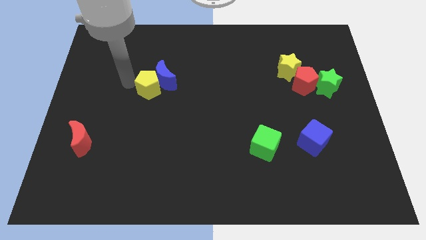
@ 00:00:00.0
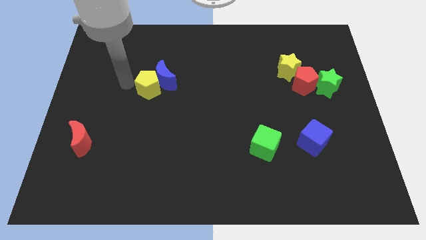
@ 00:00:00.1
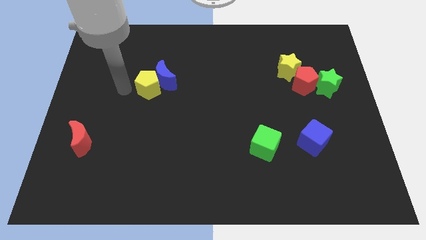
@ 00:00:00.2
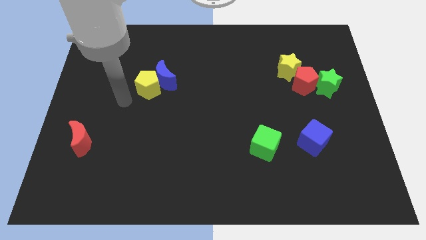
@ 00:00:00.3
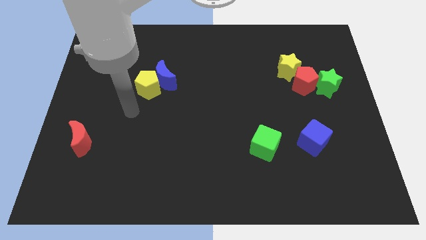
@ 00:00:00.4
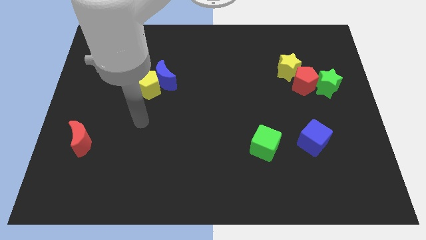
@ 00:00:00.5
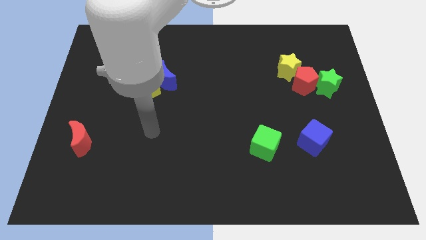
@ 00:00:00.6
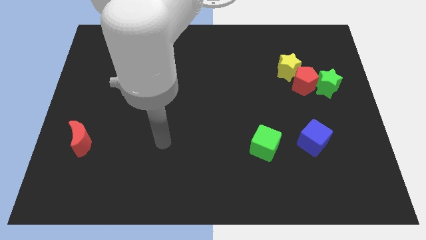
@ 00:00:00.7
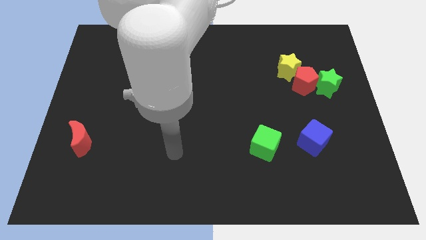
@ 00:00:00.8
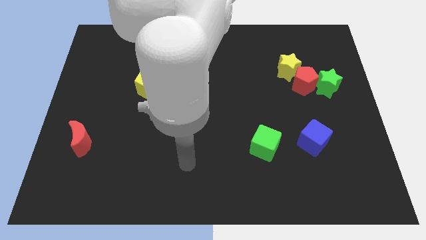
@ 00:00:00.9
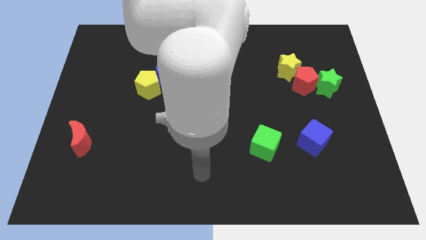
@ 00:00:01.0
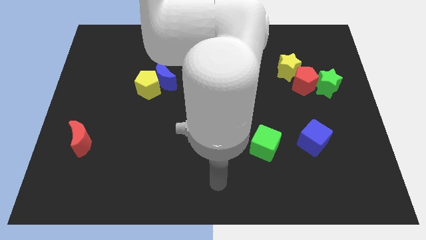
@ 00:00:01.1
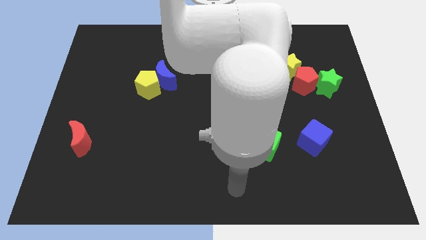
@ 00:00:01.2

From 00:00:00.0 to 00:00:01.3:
move the arm away from the yellow pentagon

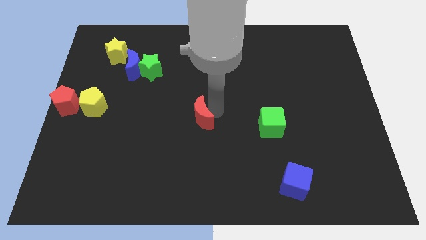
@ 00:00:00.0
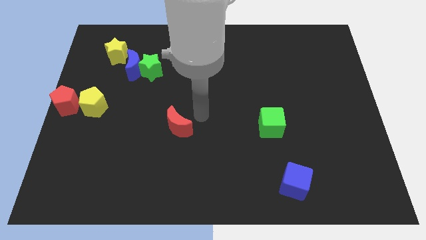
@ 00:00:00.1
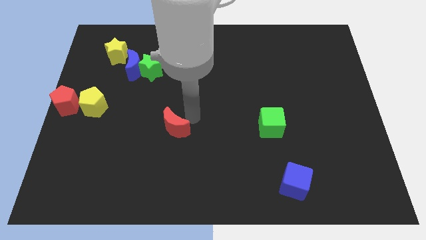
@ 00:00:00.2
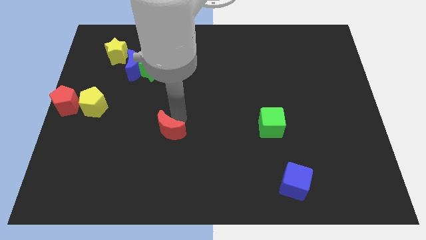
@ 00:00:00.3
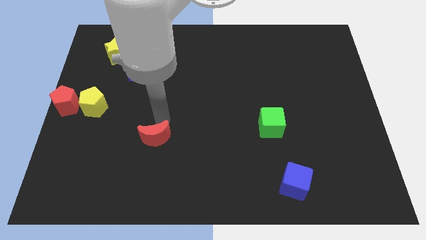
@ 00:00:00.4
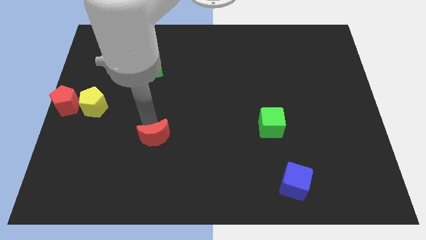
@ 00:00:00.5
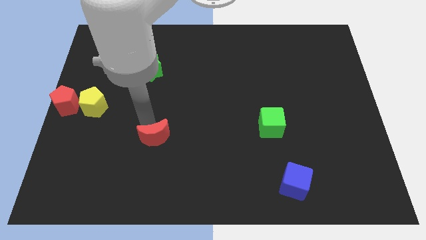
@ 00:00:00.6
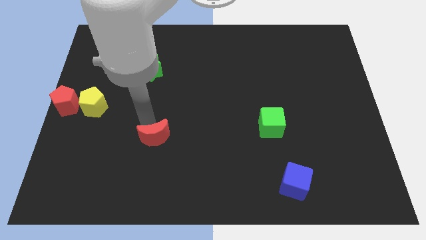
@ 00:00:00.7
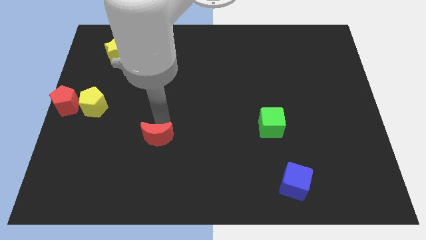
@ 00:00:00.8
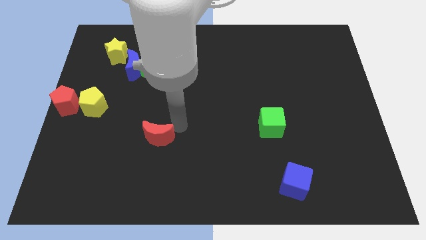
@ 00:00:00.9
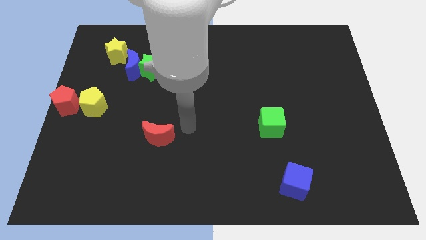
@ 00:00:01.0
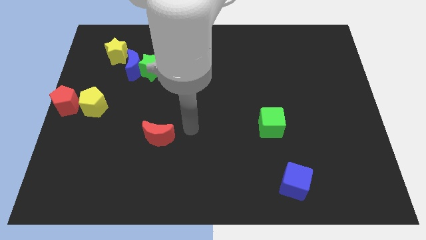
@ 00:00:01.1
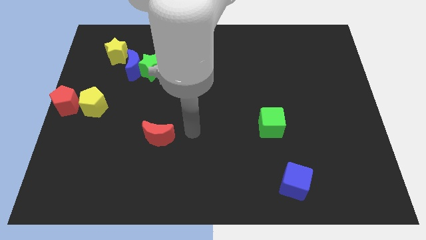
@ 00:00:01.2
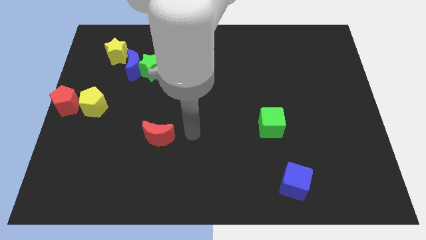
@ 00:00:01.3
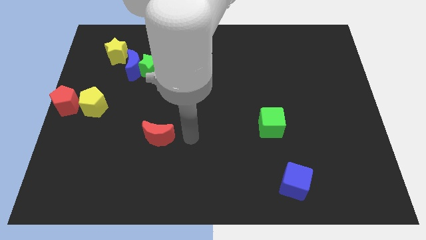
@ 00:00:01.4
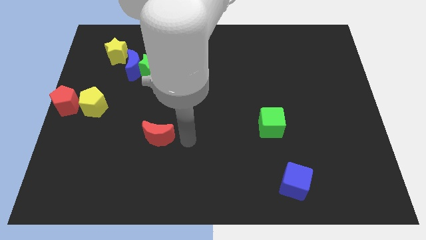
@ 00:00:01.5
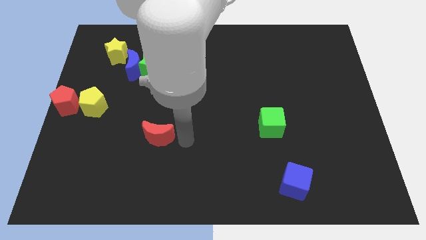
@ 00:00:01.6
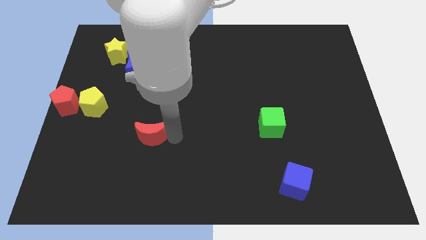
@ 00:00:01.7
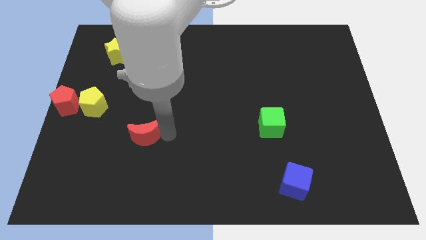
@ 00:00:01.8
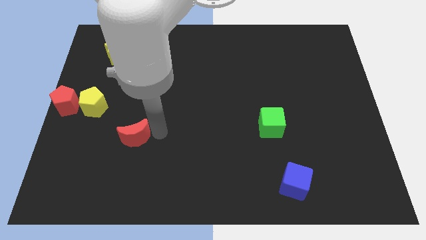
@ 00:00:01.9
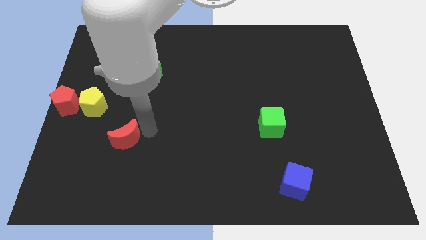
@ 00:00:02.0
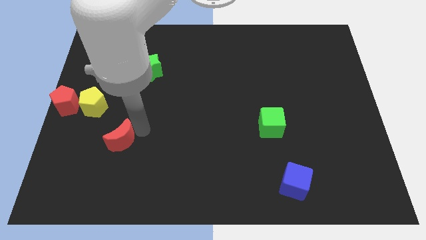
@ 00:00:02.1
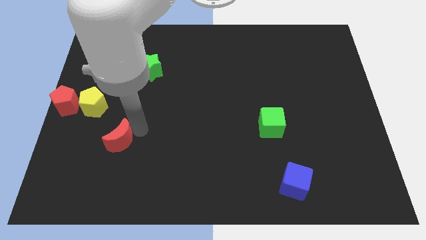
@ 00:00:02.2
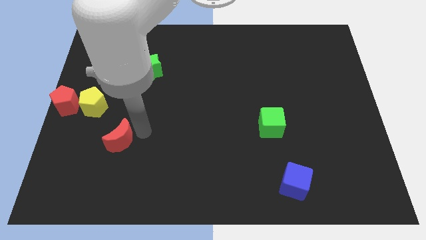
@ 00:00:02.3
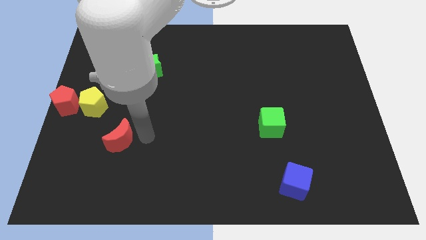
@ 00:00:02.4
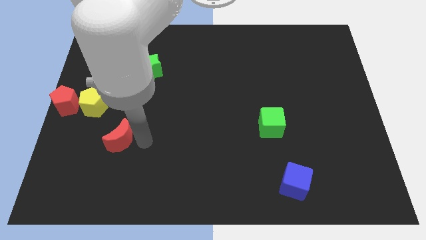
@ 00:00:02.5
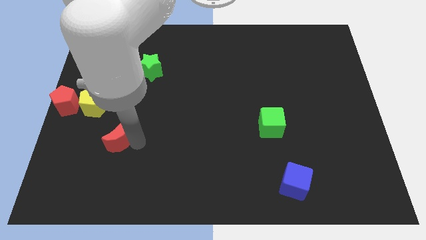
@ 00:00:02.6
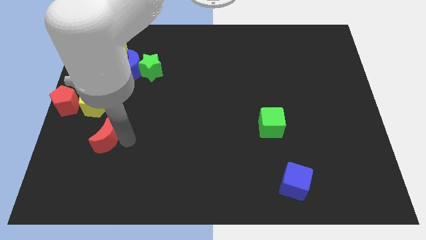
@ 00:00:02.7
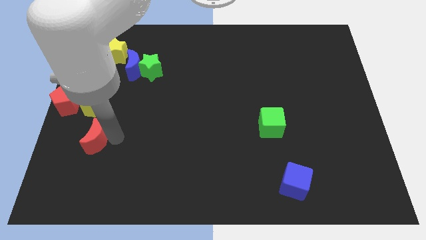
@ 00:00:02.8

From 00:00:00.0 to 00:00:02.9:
drag the red moon to the left side

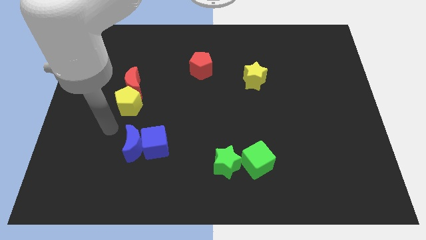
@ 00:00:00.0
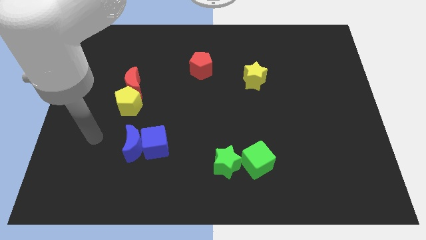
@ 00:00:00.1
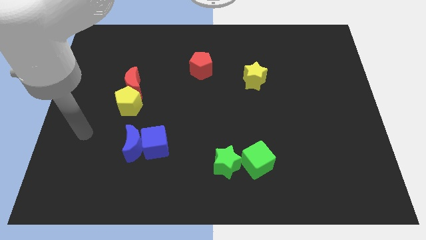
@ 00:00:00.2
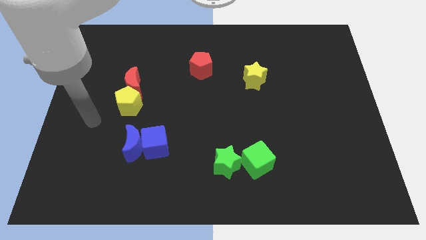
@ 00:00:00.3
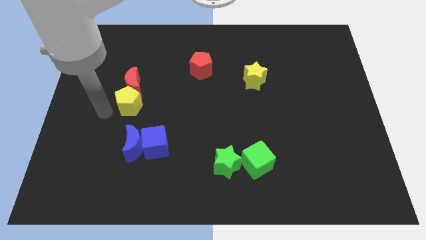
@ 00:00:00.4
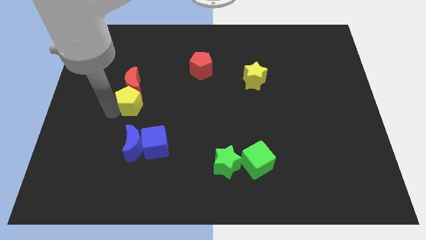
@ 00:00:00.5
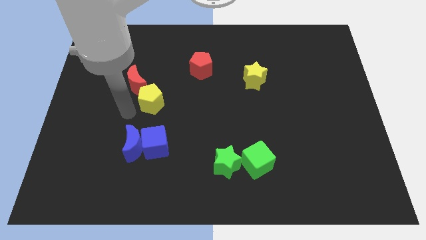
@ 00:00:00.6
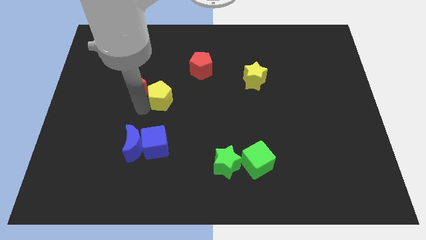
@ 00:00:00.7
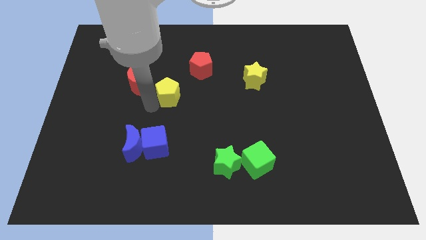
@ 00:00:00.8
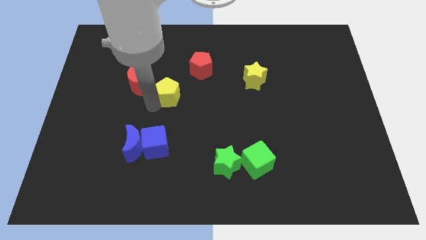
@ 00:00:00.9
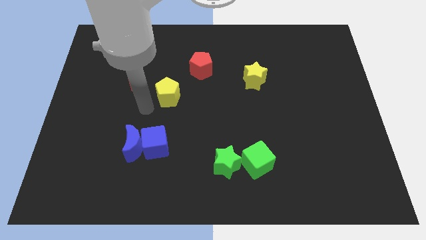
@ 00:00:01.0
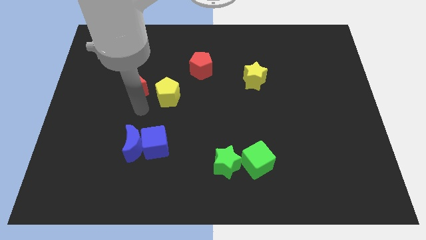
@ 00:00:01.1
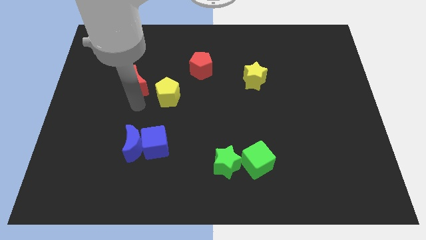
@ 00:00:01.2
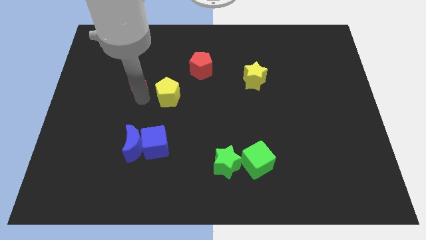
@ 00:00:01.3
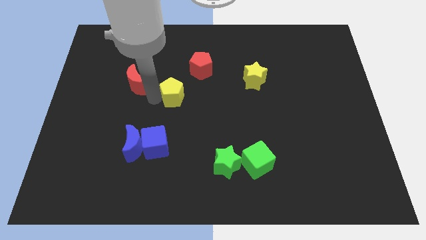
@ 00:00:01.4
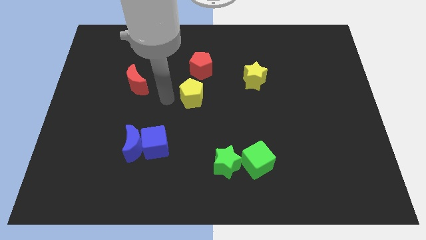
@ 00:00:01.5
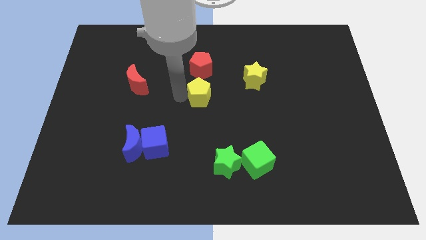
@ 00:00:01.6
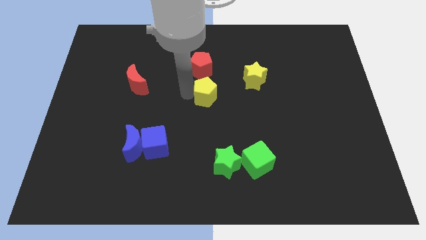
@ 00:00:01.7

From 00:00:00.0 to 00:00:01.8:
move yellow pentagon down to the red pentagon

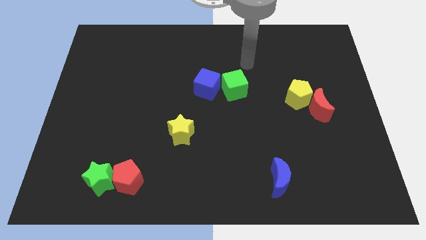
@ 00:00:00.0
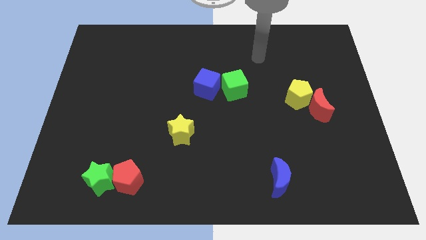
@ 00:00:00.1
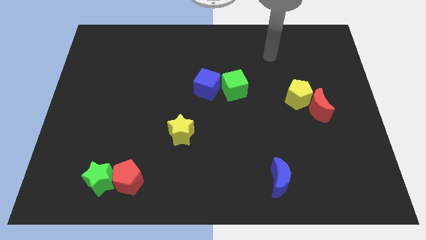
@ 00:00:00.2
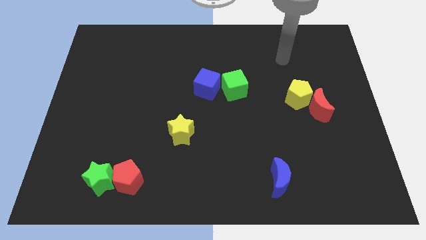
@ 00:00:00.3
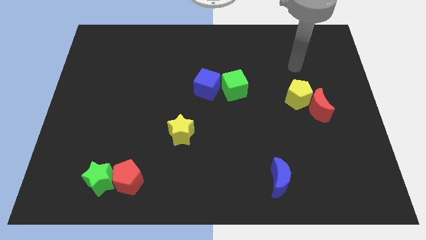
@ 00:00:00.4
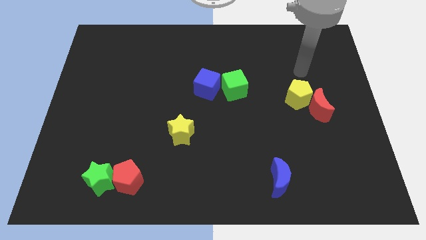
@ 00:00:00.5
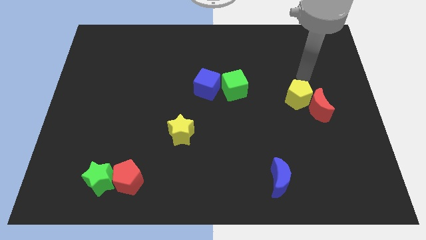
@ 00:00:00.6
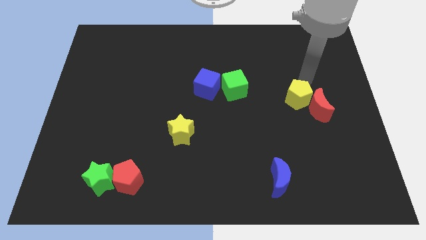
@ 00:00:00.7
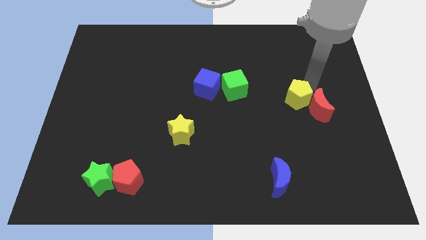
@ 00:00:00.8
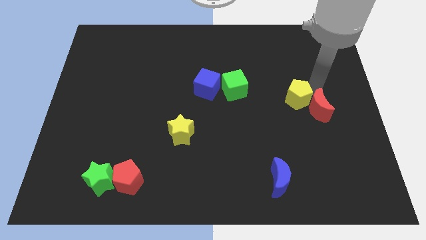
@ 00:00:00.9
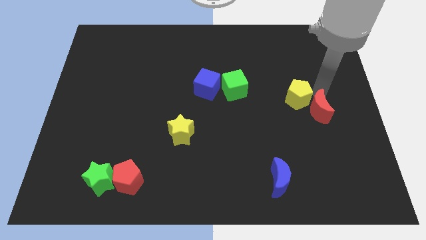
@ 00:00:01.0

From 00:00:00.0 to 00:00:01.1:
tap the red crescent

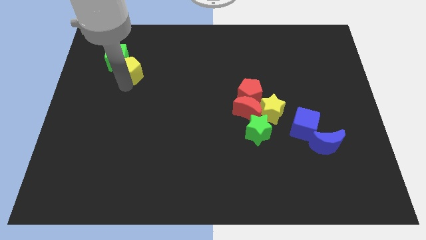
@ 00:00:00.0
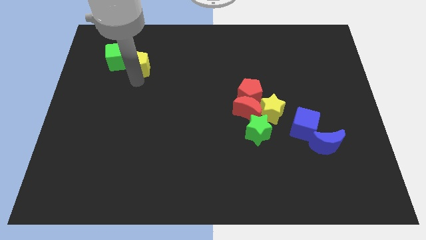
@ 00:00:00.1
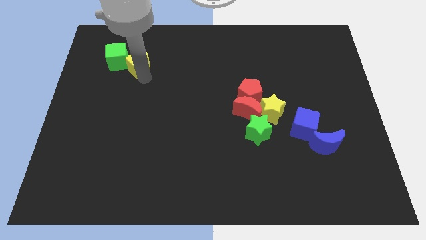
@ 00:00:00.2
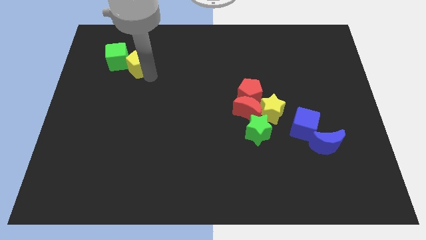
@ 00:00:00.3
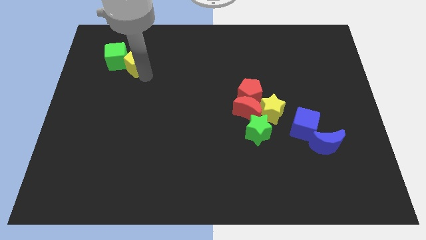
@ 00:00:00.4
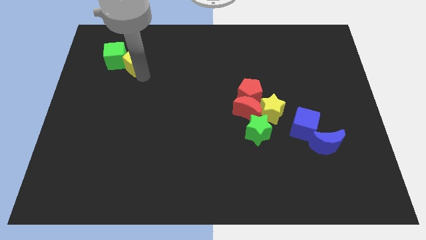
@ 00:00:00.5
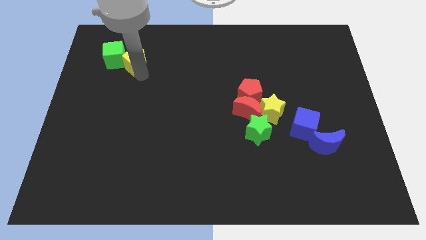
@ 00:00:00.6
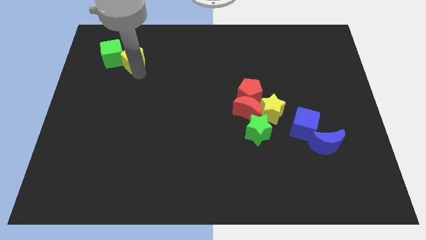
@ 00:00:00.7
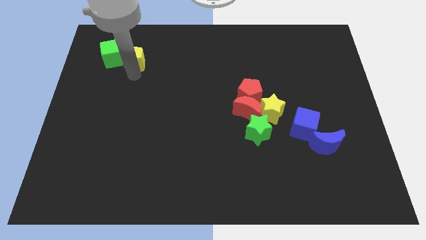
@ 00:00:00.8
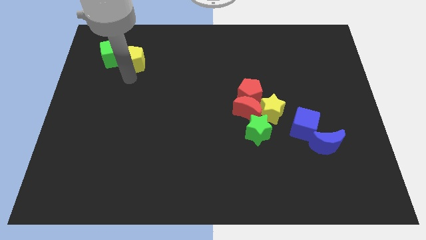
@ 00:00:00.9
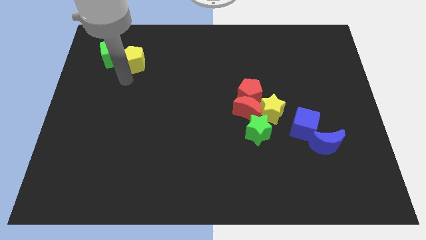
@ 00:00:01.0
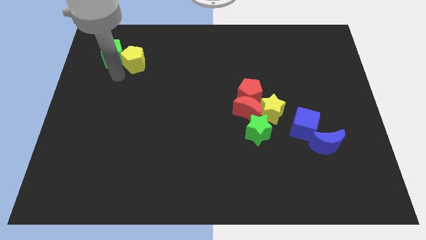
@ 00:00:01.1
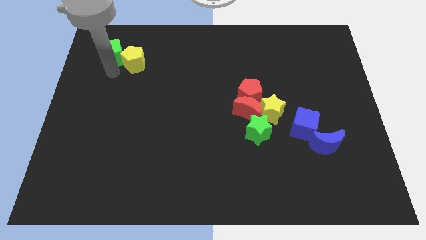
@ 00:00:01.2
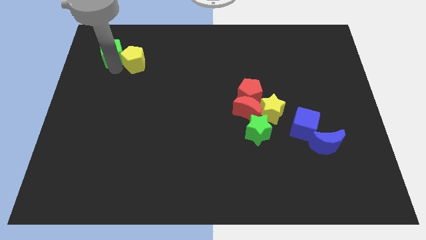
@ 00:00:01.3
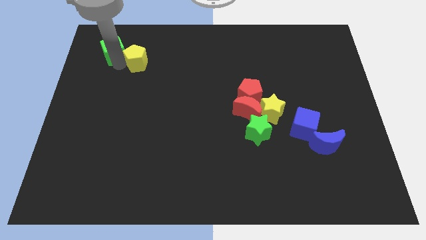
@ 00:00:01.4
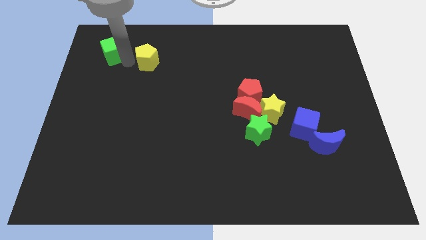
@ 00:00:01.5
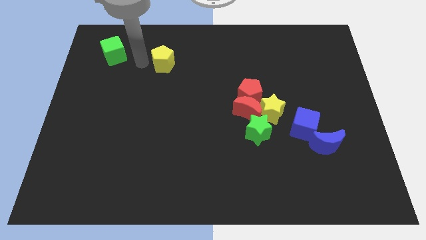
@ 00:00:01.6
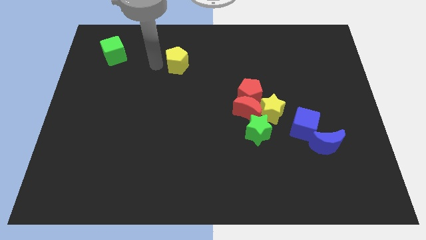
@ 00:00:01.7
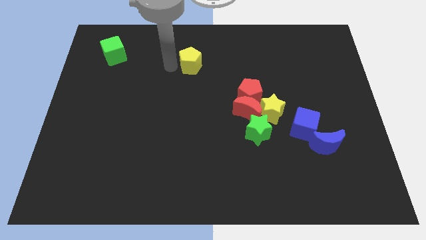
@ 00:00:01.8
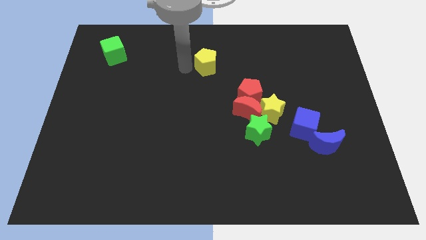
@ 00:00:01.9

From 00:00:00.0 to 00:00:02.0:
separate the yellow pentagon and the green cube
